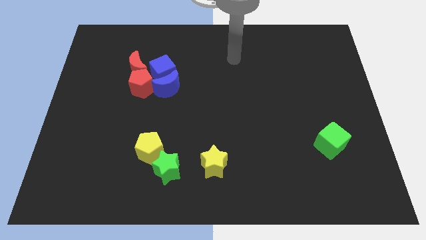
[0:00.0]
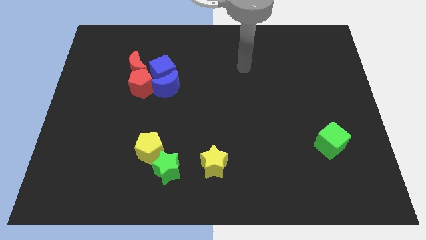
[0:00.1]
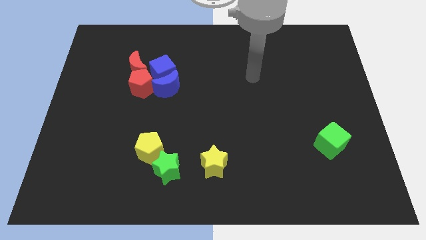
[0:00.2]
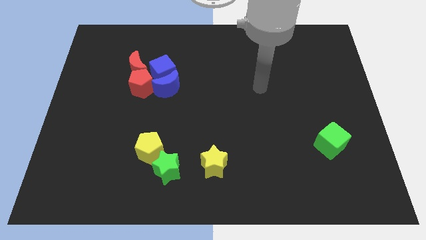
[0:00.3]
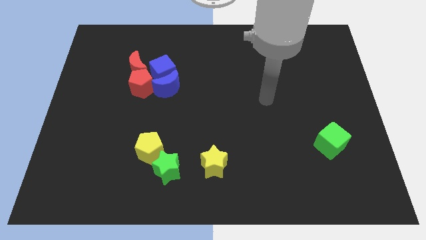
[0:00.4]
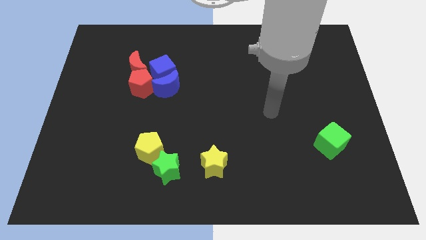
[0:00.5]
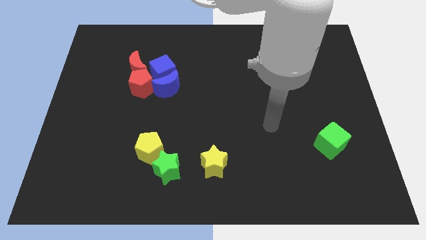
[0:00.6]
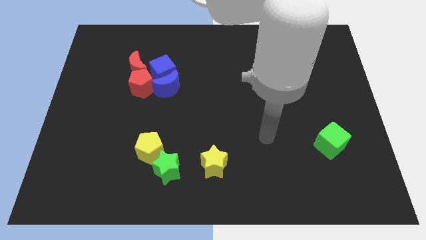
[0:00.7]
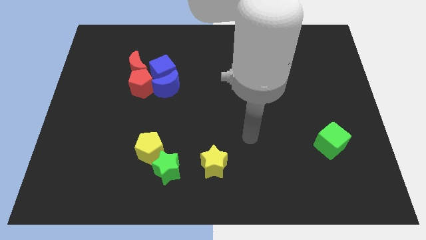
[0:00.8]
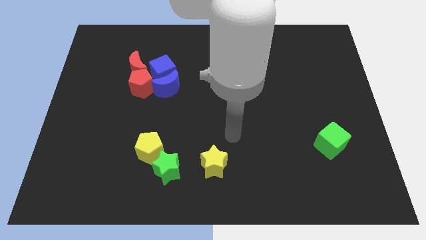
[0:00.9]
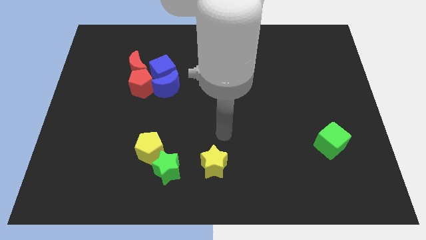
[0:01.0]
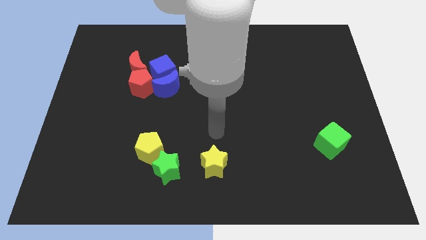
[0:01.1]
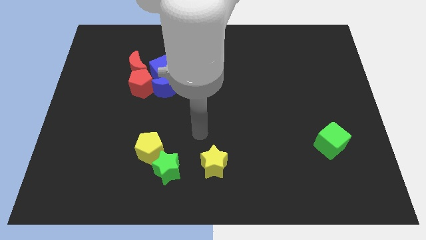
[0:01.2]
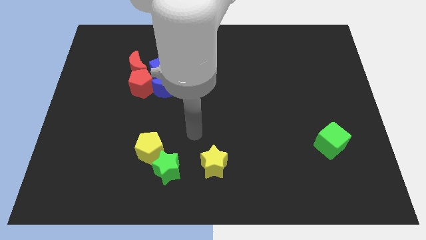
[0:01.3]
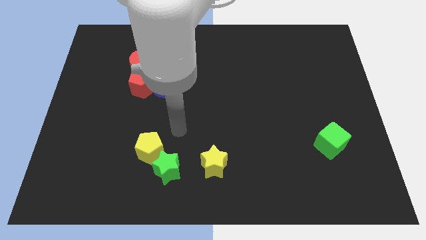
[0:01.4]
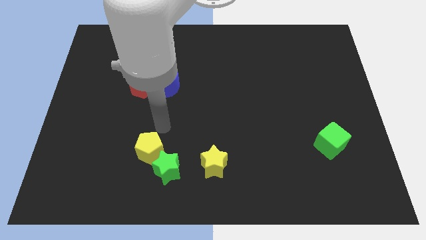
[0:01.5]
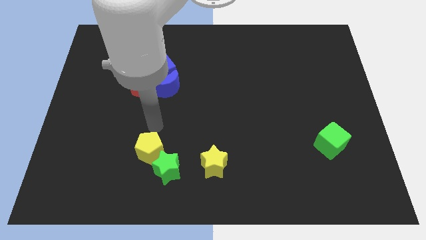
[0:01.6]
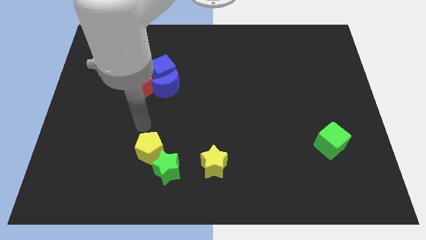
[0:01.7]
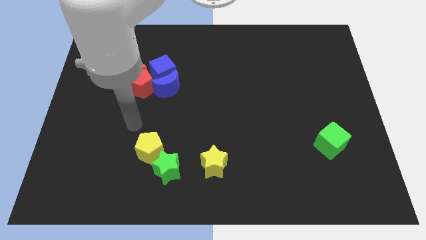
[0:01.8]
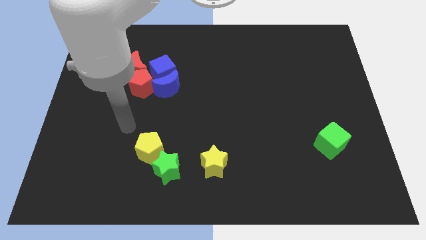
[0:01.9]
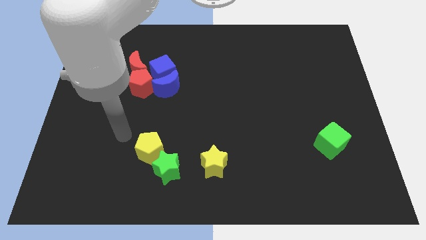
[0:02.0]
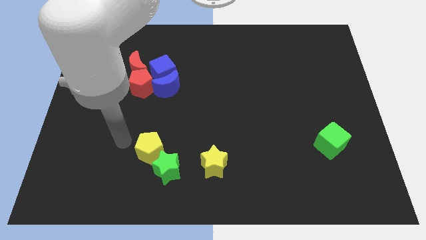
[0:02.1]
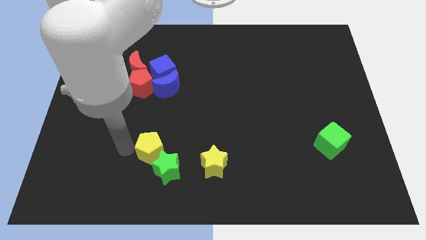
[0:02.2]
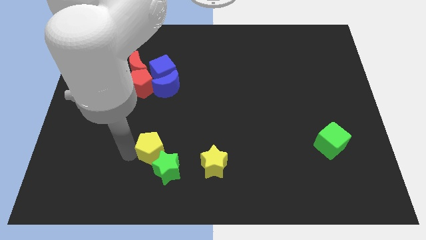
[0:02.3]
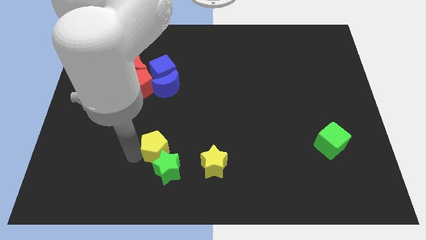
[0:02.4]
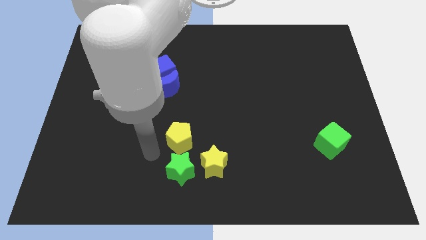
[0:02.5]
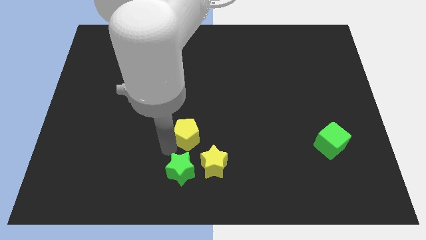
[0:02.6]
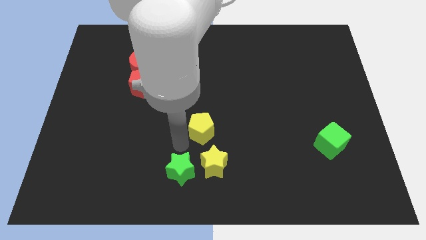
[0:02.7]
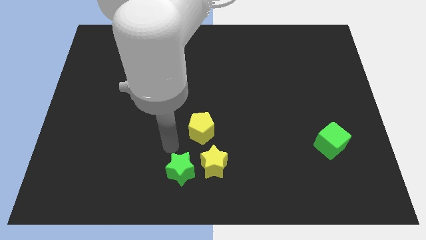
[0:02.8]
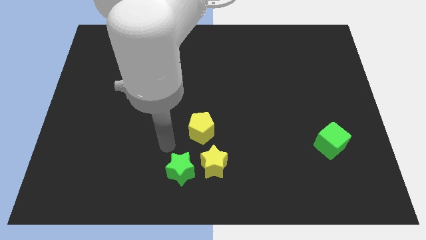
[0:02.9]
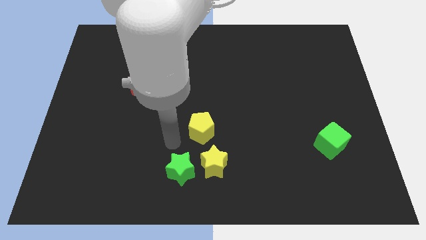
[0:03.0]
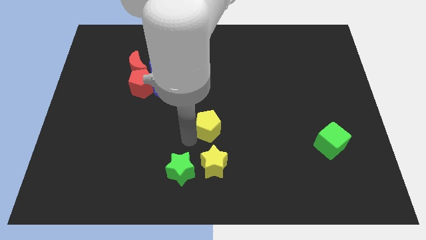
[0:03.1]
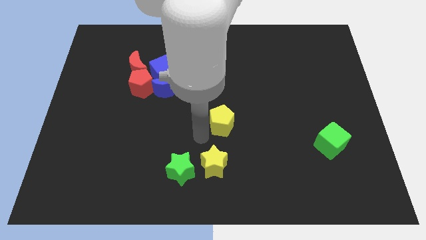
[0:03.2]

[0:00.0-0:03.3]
place the yellow pentagon above yellow star

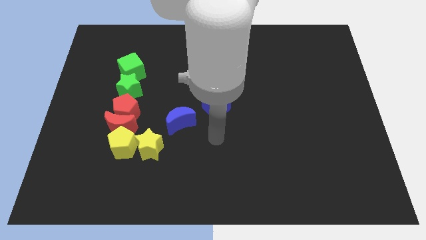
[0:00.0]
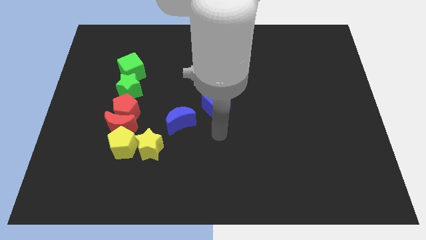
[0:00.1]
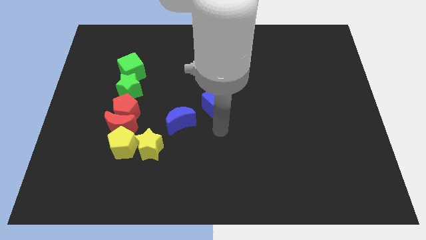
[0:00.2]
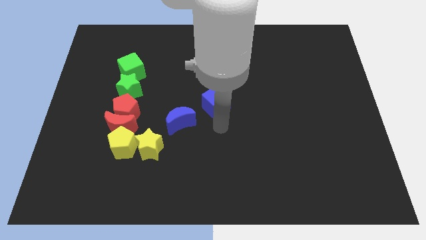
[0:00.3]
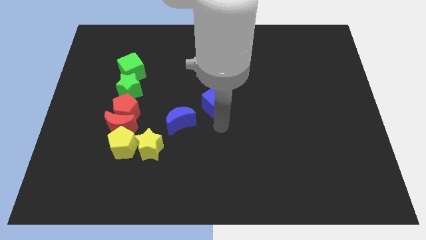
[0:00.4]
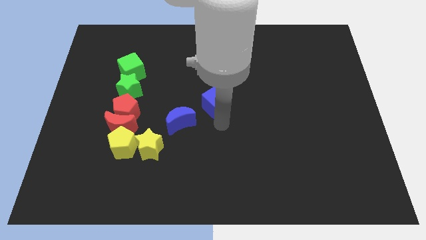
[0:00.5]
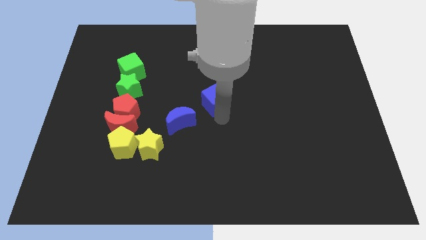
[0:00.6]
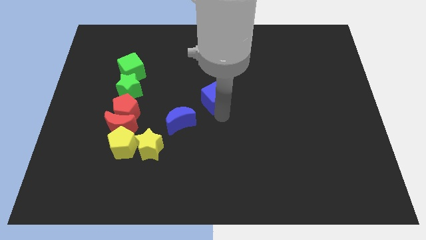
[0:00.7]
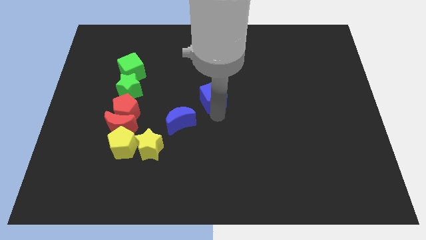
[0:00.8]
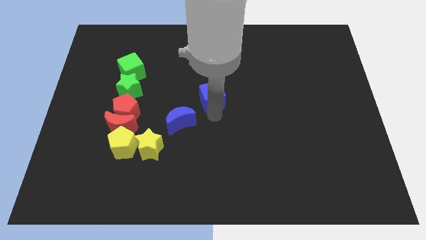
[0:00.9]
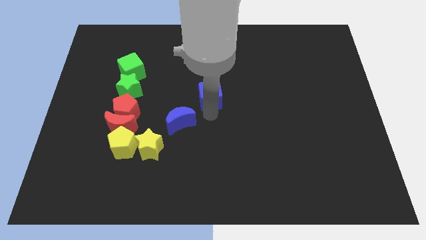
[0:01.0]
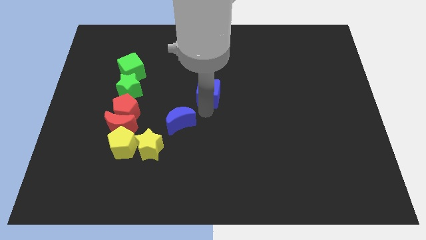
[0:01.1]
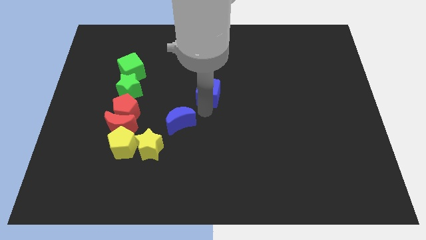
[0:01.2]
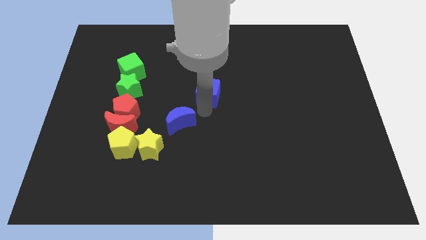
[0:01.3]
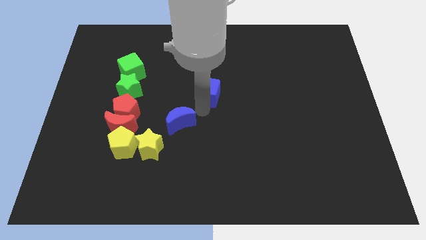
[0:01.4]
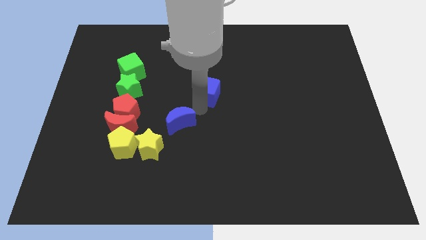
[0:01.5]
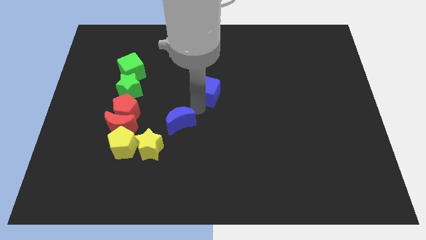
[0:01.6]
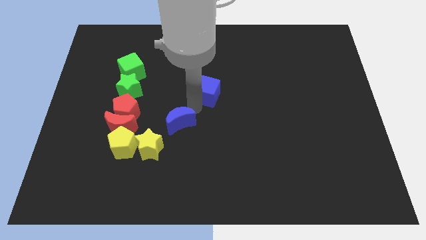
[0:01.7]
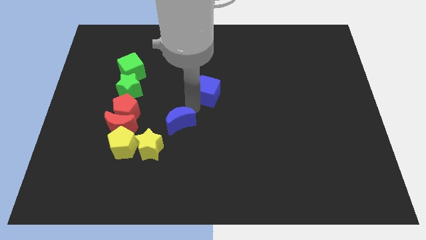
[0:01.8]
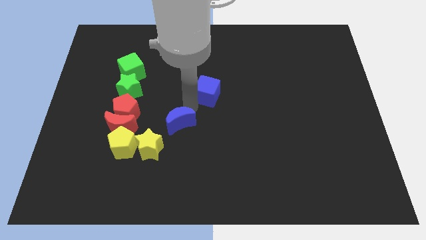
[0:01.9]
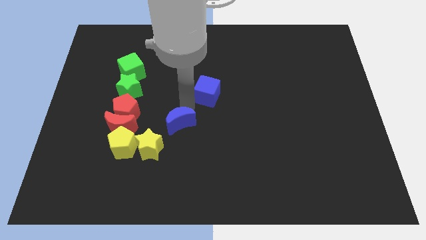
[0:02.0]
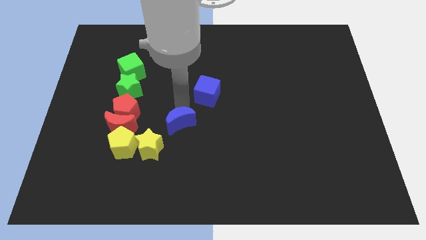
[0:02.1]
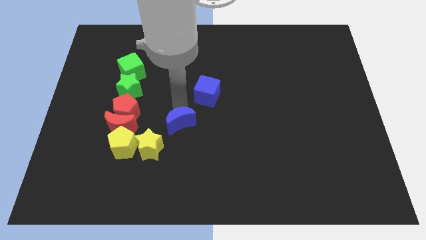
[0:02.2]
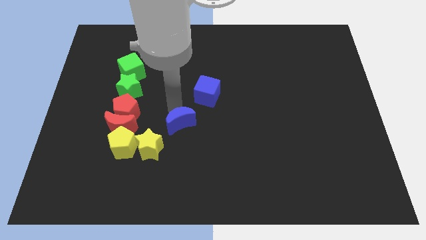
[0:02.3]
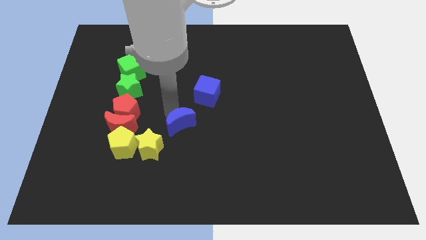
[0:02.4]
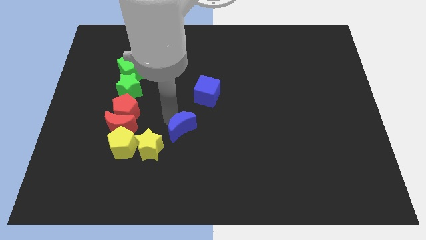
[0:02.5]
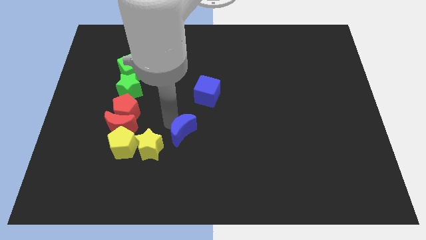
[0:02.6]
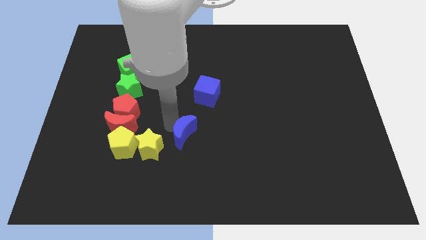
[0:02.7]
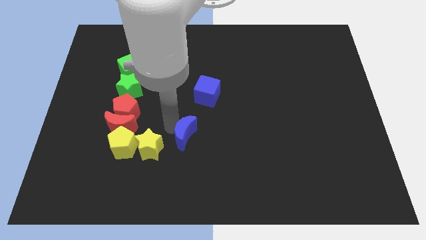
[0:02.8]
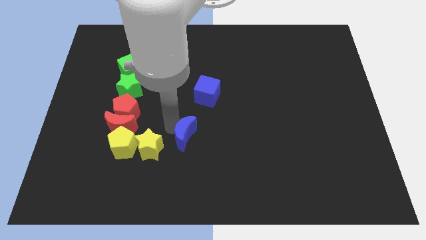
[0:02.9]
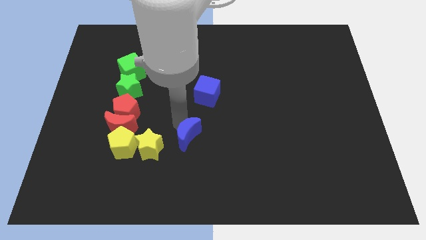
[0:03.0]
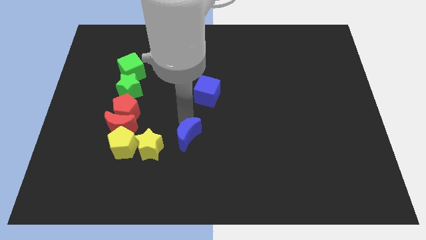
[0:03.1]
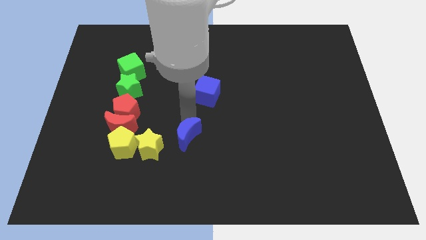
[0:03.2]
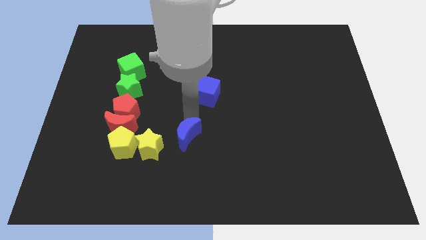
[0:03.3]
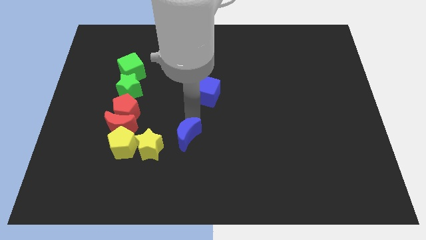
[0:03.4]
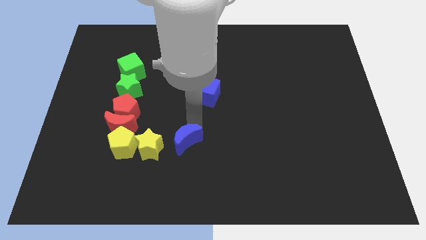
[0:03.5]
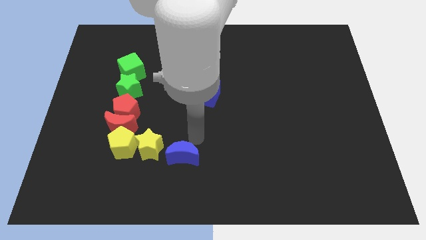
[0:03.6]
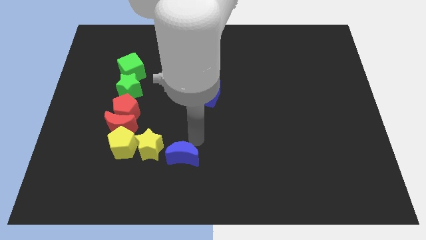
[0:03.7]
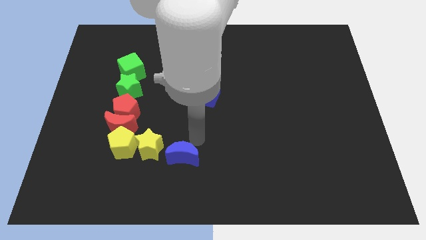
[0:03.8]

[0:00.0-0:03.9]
place blue moon to the right of yellow star

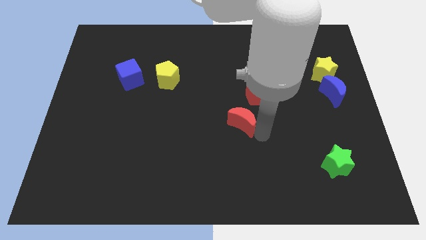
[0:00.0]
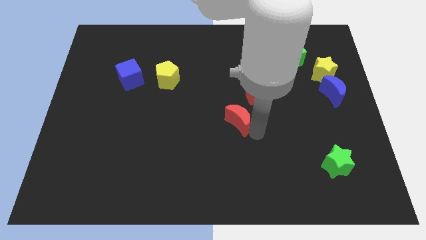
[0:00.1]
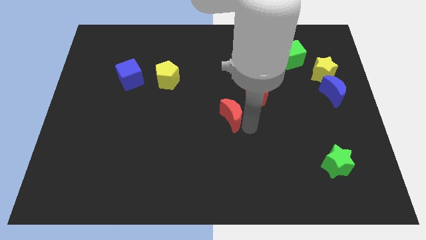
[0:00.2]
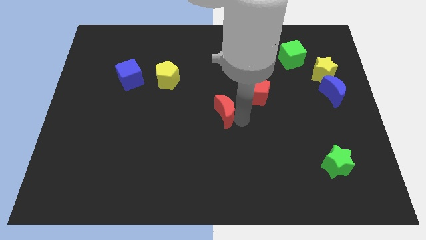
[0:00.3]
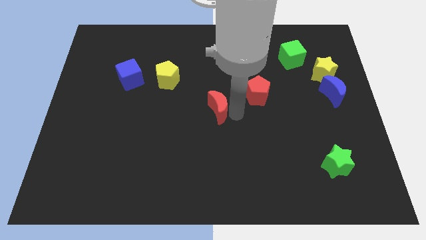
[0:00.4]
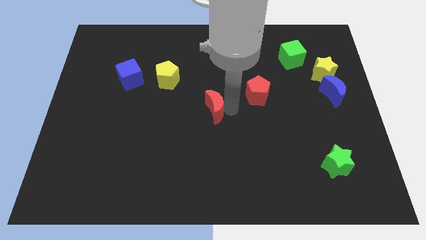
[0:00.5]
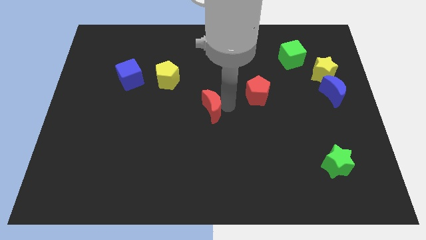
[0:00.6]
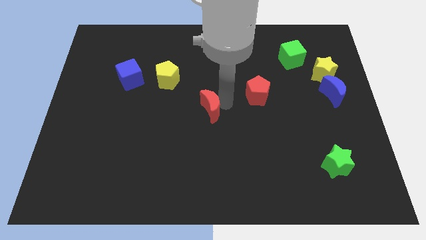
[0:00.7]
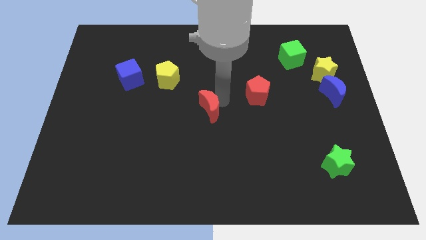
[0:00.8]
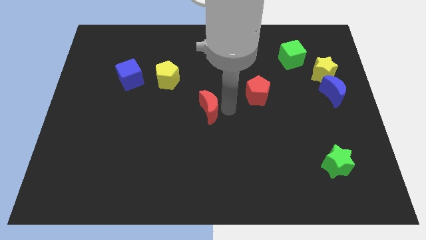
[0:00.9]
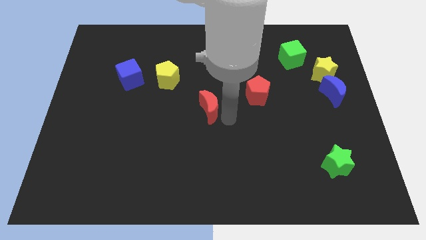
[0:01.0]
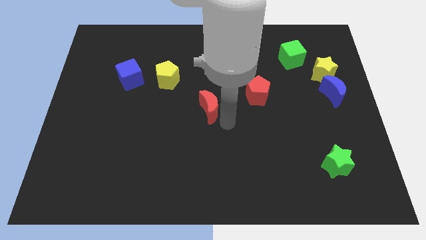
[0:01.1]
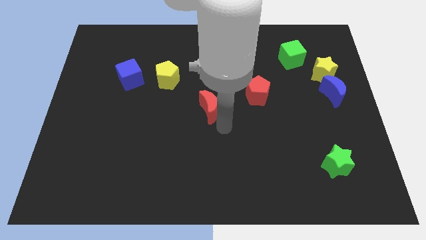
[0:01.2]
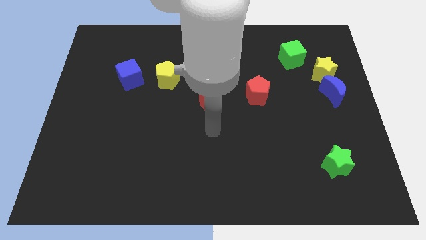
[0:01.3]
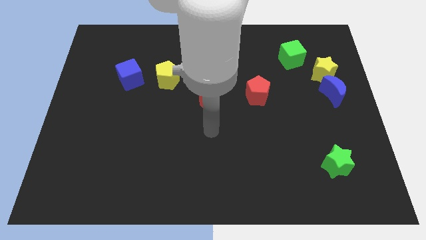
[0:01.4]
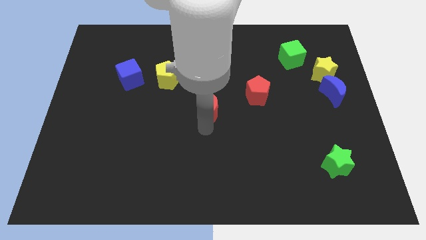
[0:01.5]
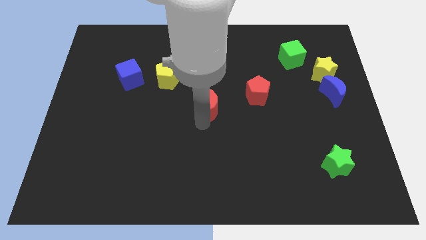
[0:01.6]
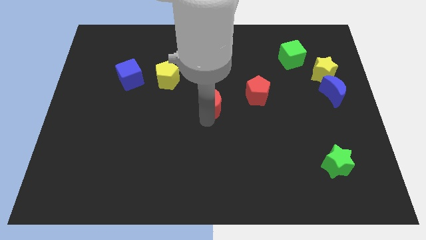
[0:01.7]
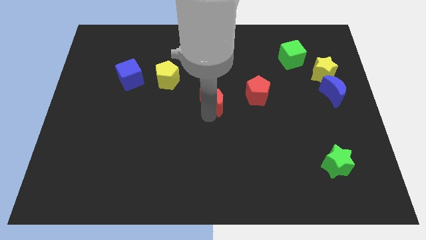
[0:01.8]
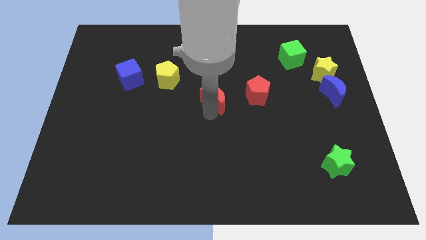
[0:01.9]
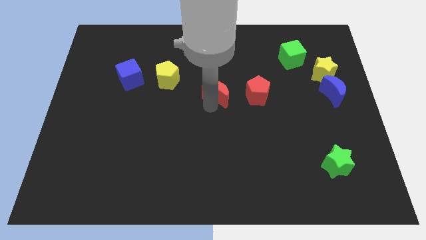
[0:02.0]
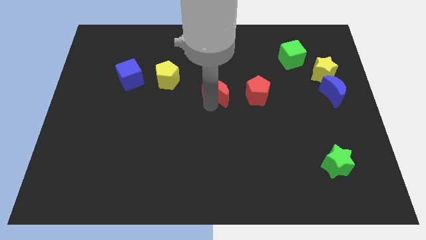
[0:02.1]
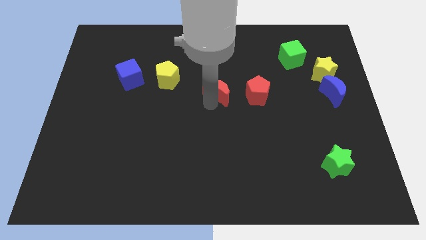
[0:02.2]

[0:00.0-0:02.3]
place the red moon left to the red pentagon
